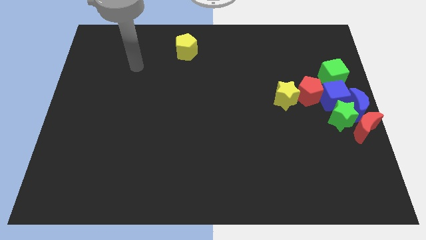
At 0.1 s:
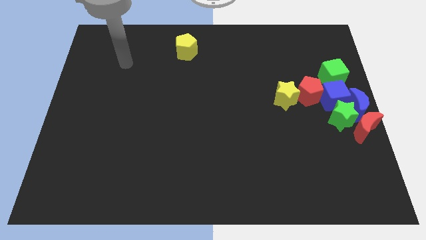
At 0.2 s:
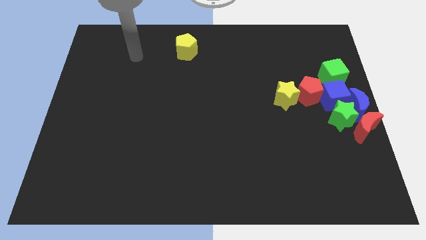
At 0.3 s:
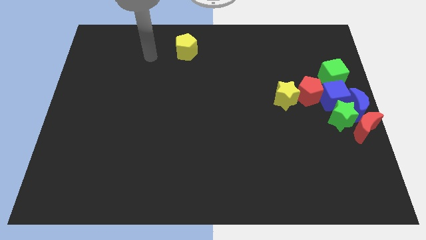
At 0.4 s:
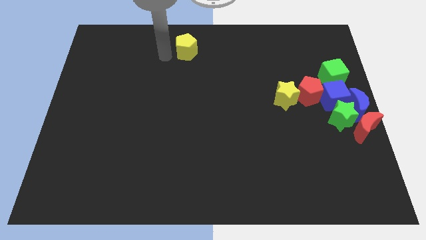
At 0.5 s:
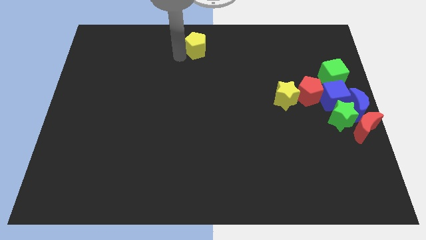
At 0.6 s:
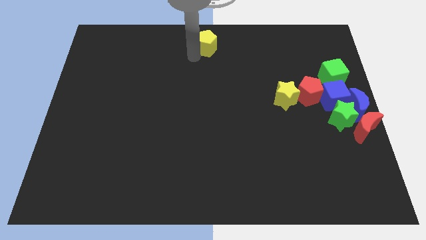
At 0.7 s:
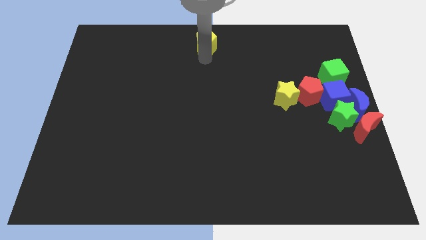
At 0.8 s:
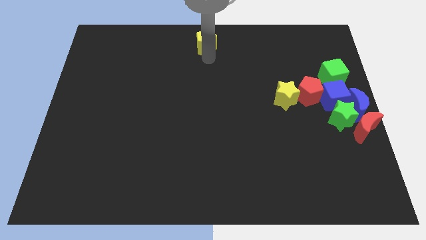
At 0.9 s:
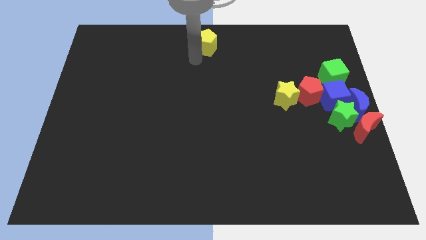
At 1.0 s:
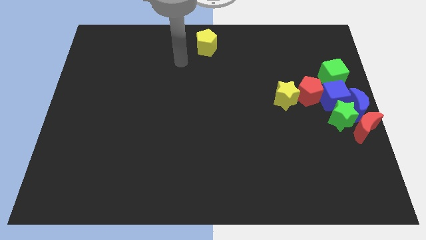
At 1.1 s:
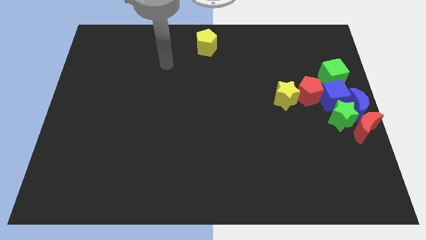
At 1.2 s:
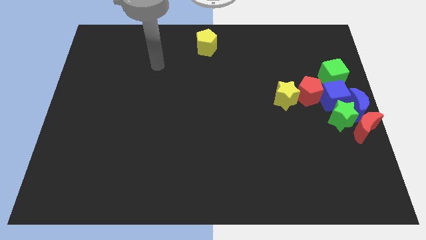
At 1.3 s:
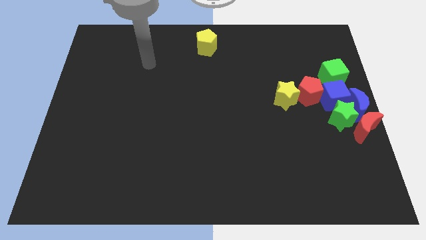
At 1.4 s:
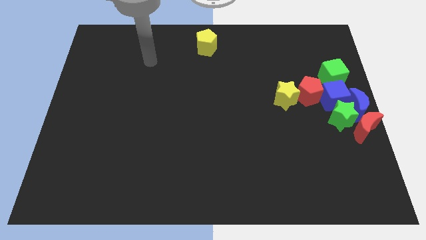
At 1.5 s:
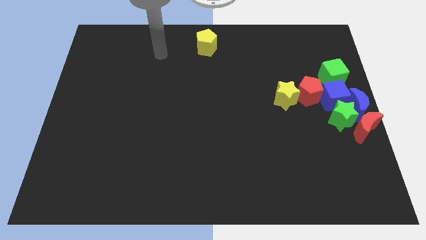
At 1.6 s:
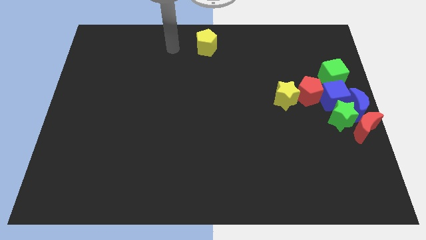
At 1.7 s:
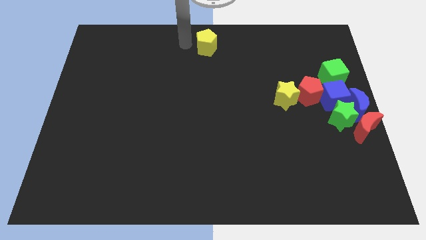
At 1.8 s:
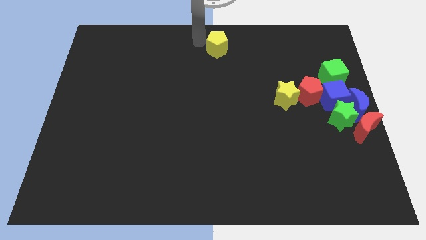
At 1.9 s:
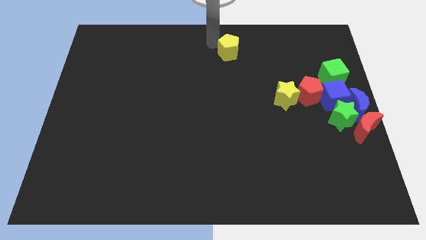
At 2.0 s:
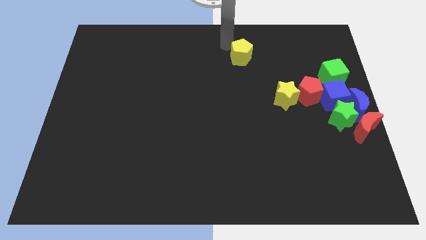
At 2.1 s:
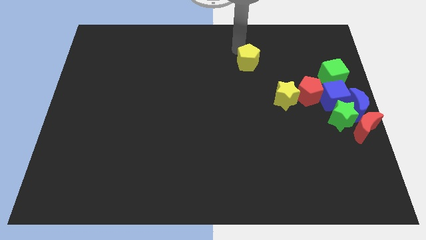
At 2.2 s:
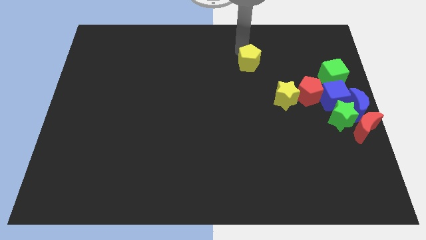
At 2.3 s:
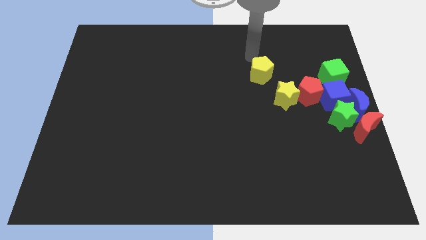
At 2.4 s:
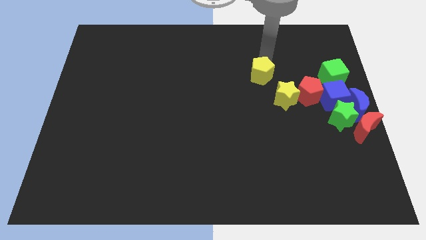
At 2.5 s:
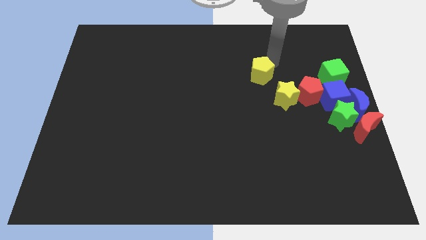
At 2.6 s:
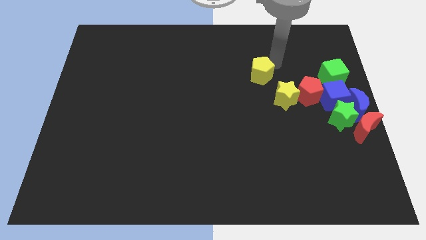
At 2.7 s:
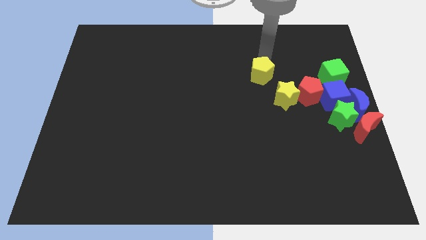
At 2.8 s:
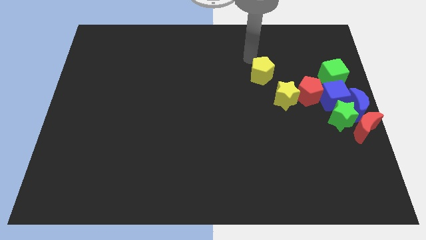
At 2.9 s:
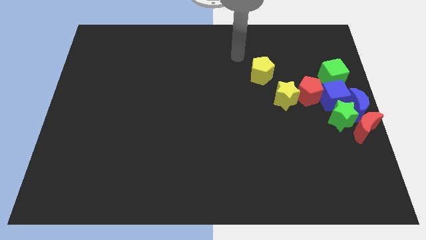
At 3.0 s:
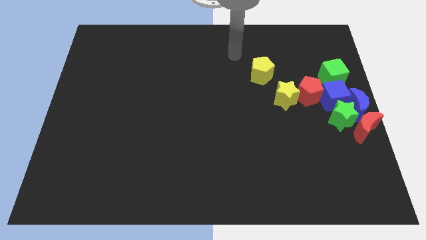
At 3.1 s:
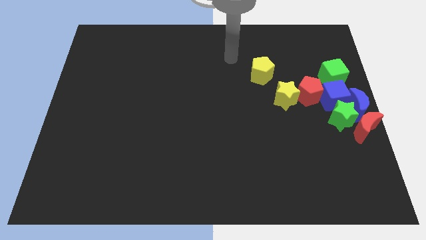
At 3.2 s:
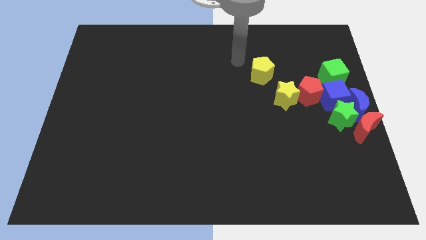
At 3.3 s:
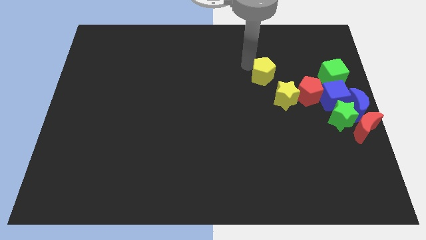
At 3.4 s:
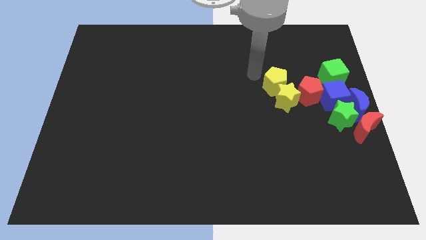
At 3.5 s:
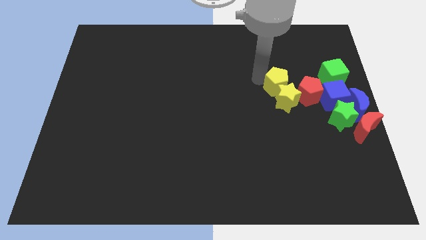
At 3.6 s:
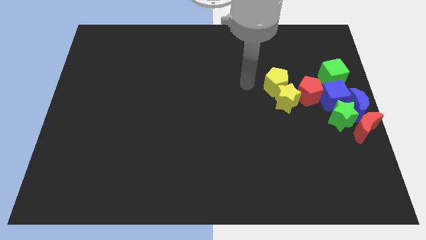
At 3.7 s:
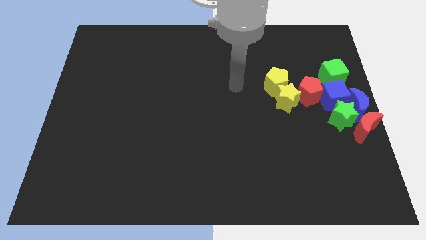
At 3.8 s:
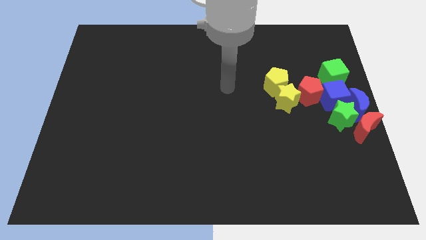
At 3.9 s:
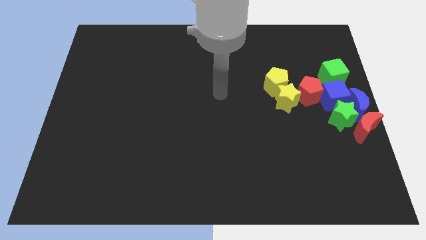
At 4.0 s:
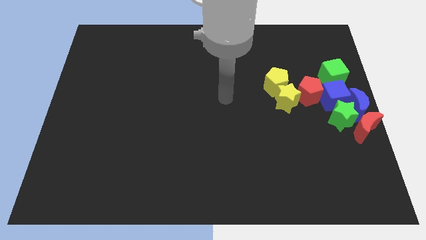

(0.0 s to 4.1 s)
push the yellow pentagon into the yellow star

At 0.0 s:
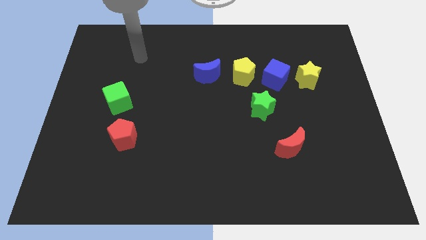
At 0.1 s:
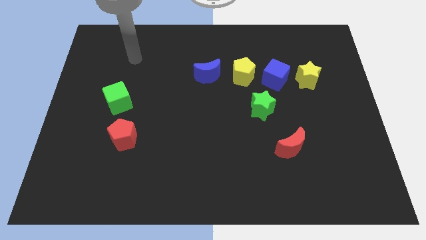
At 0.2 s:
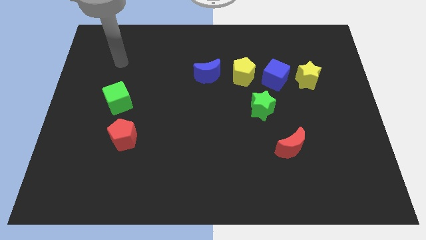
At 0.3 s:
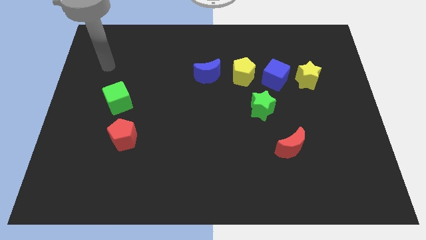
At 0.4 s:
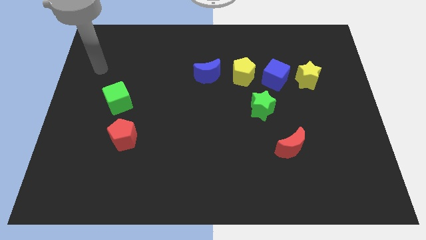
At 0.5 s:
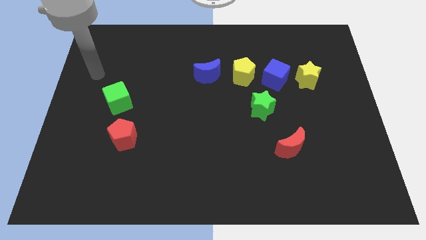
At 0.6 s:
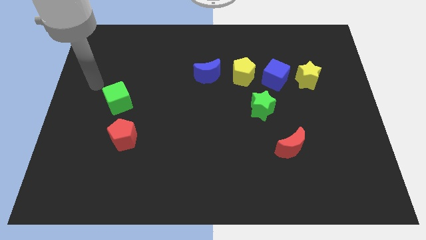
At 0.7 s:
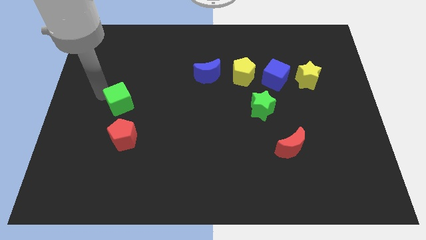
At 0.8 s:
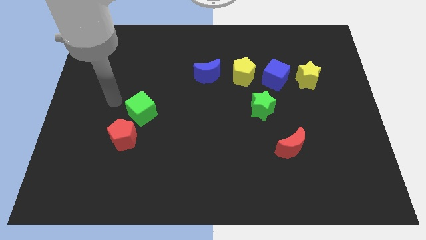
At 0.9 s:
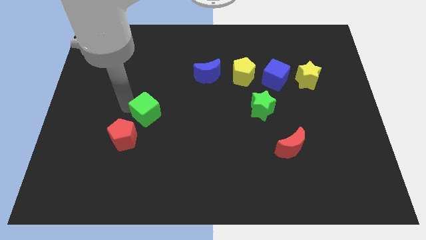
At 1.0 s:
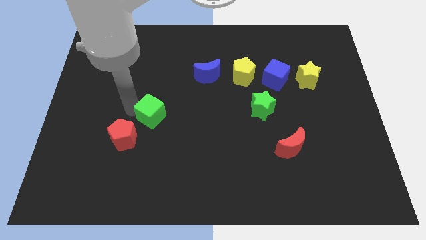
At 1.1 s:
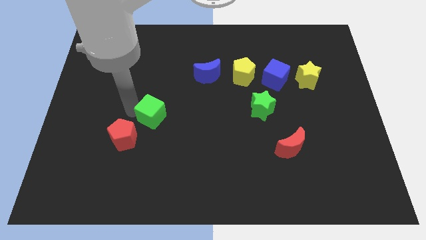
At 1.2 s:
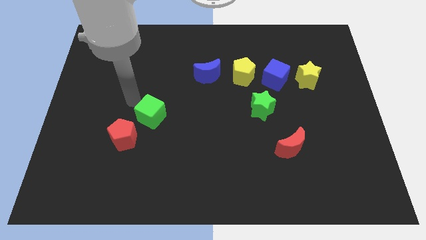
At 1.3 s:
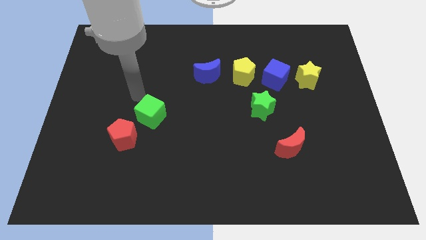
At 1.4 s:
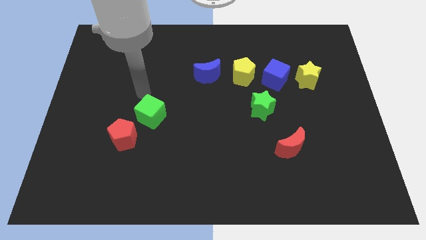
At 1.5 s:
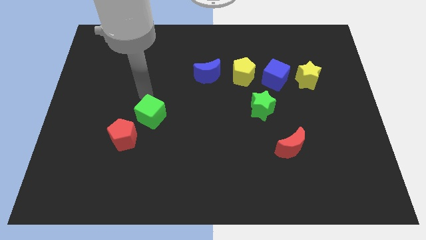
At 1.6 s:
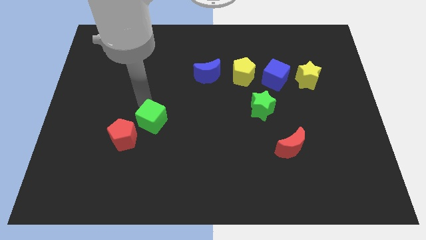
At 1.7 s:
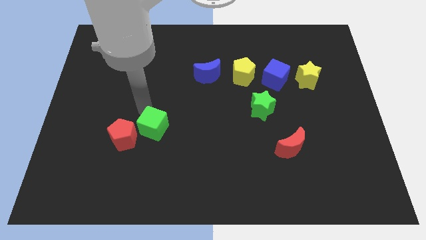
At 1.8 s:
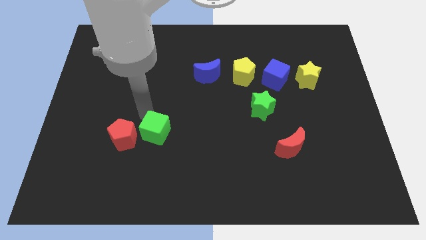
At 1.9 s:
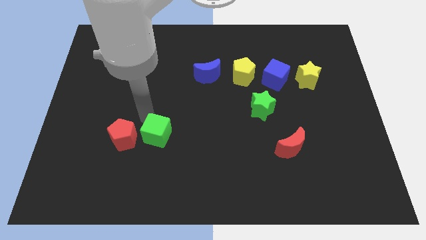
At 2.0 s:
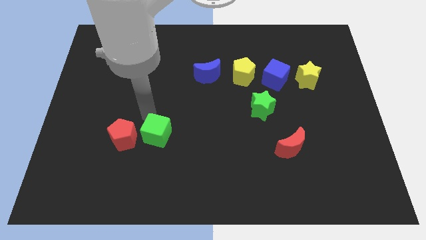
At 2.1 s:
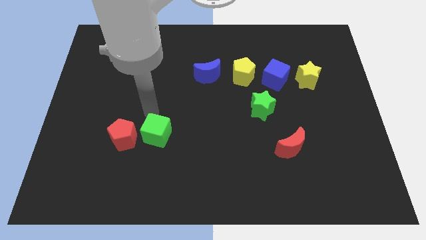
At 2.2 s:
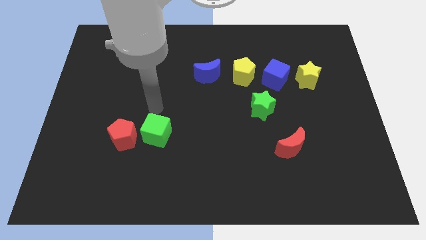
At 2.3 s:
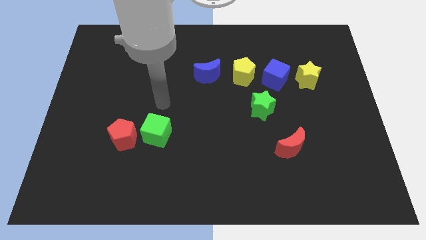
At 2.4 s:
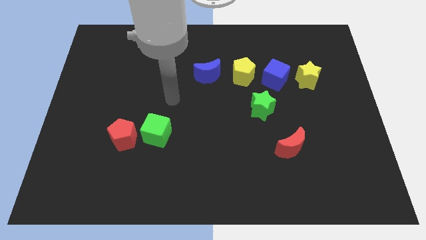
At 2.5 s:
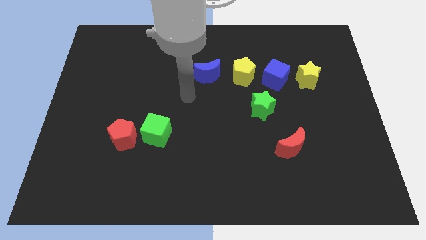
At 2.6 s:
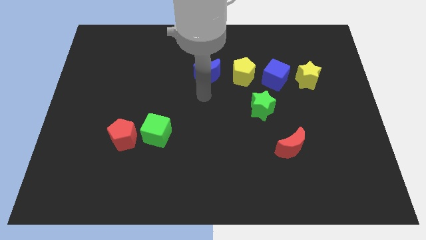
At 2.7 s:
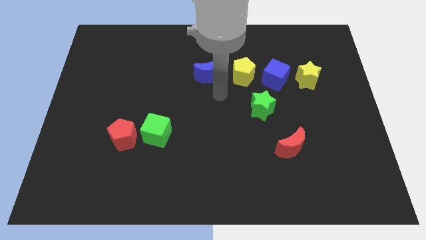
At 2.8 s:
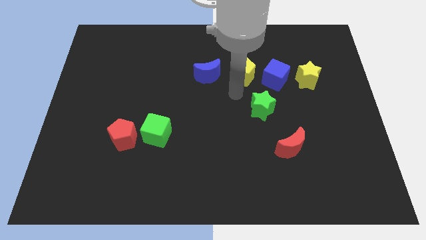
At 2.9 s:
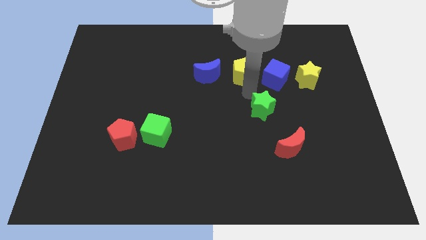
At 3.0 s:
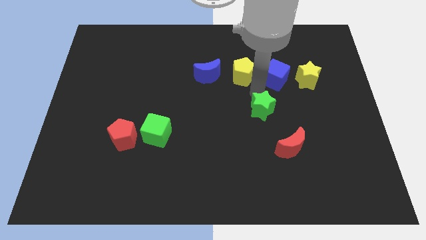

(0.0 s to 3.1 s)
move green cube to the right of red pentagon

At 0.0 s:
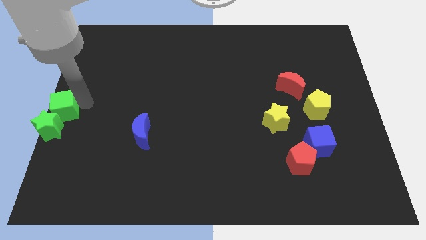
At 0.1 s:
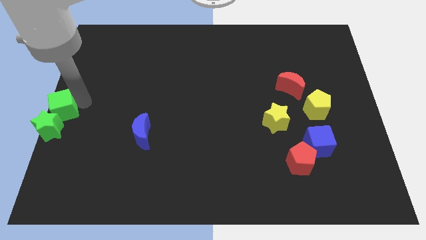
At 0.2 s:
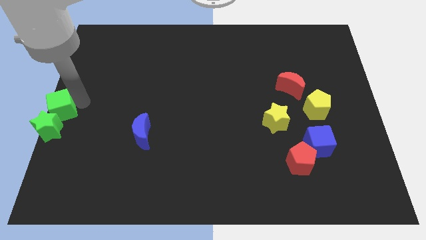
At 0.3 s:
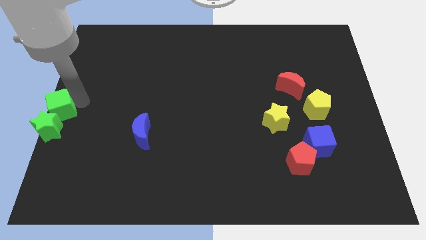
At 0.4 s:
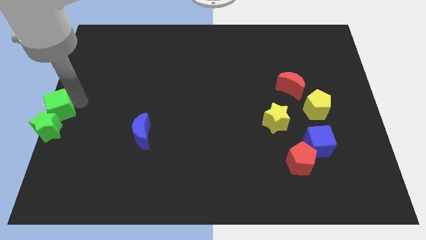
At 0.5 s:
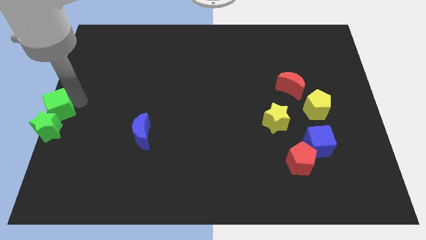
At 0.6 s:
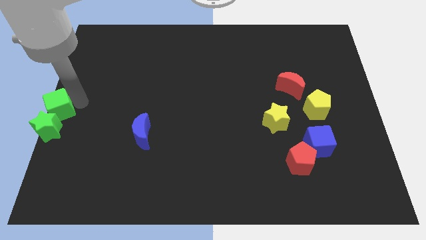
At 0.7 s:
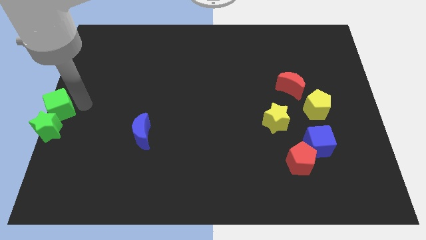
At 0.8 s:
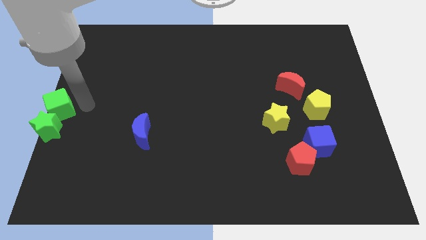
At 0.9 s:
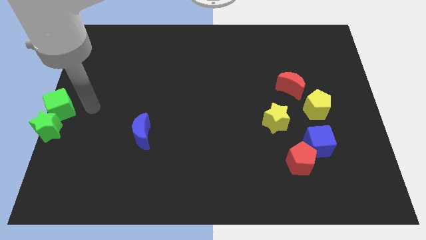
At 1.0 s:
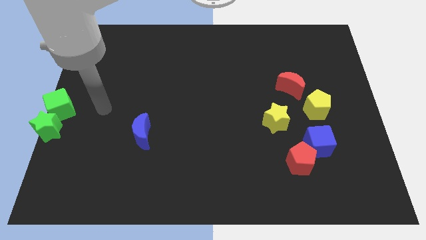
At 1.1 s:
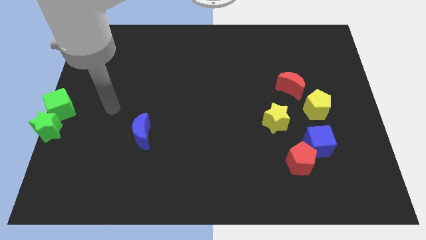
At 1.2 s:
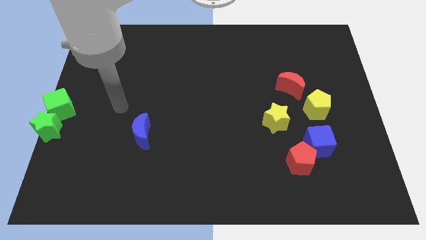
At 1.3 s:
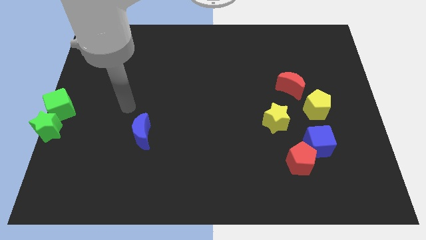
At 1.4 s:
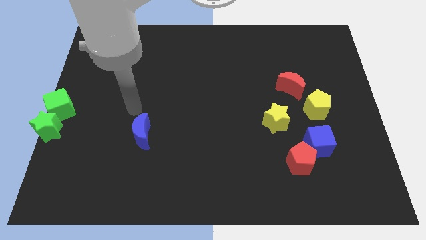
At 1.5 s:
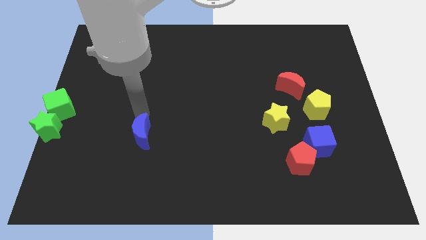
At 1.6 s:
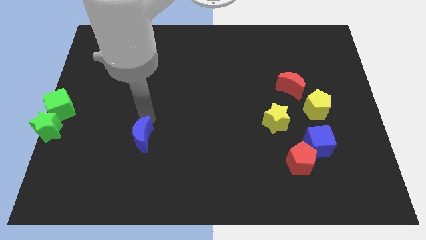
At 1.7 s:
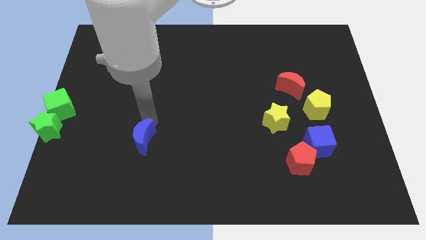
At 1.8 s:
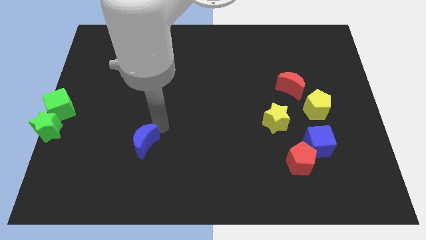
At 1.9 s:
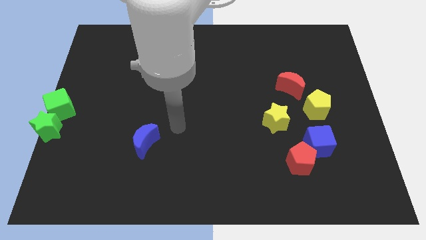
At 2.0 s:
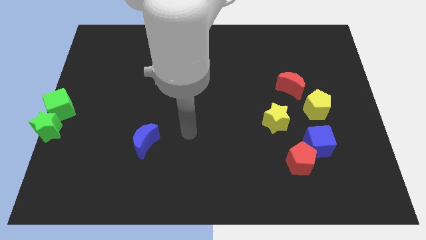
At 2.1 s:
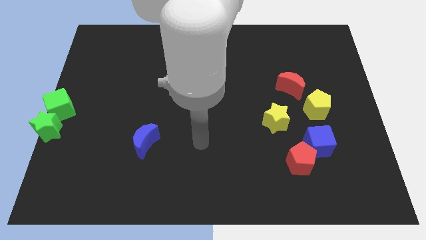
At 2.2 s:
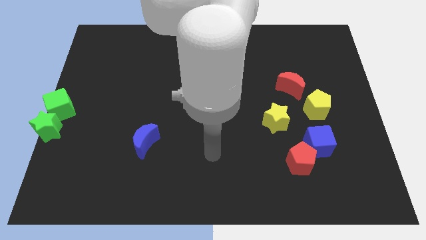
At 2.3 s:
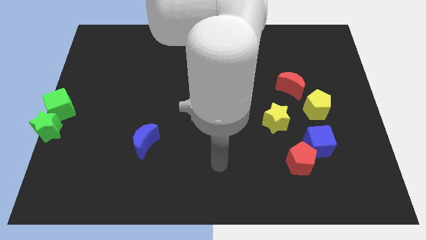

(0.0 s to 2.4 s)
slight push the blue crescent to the downwards direction
